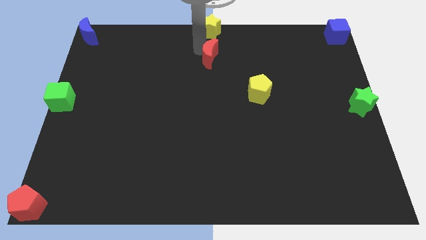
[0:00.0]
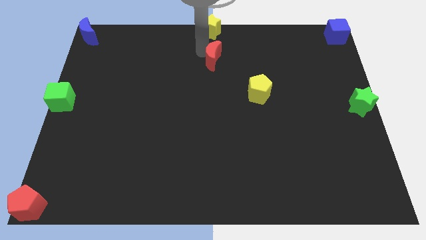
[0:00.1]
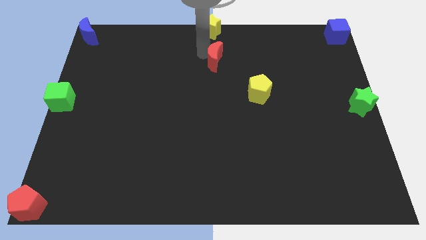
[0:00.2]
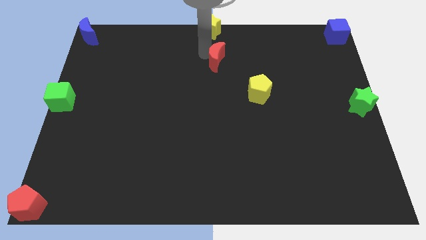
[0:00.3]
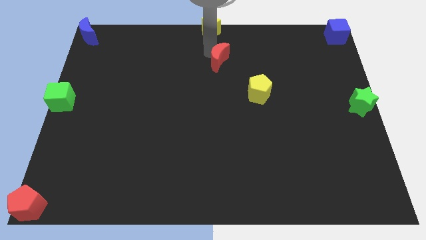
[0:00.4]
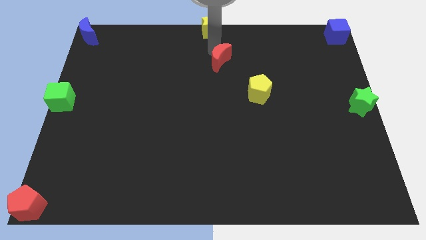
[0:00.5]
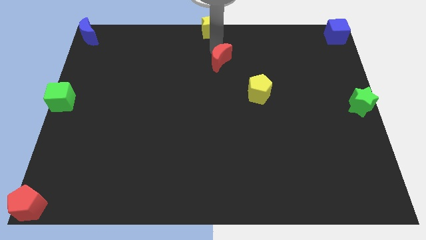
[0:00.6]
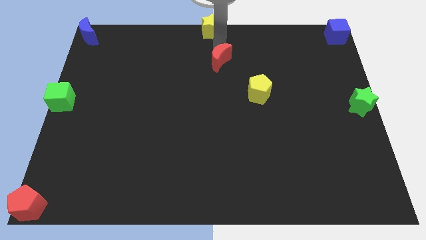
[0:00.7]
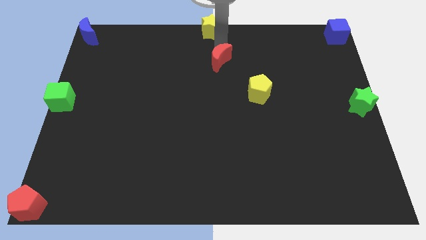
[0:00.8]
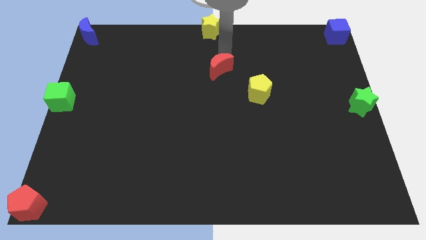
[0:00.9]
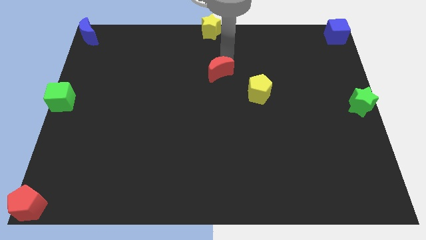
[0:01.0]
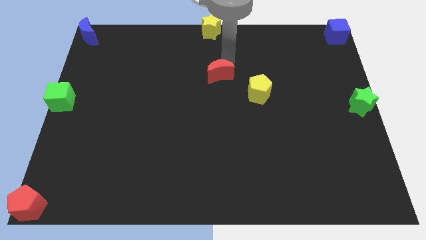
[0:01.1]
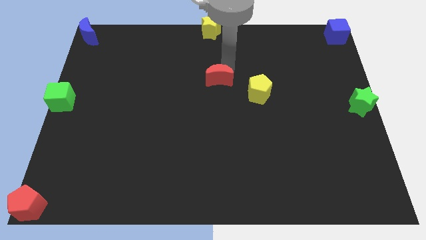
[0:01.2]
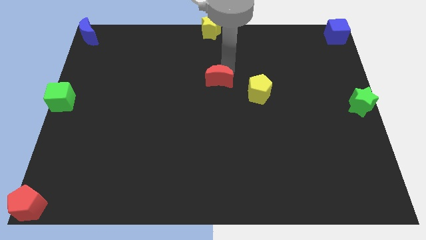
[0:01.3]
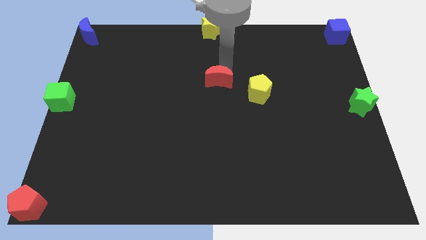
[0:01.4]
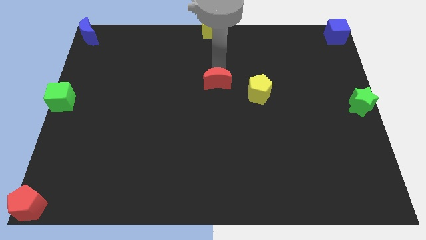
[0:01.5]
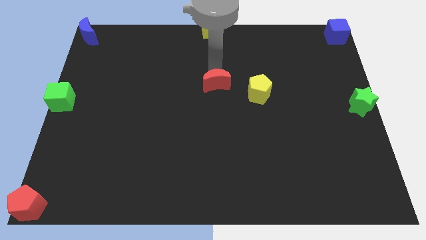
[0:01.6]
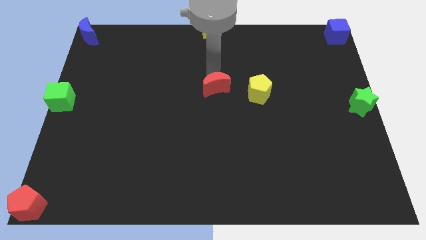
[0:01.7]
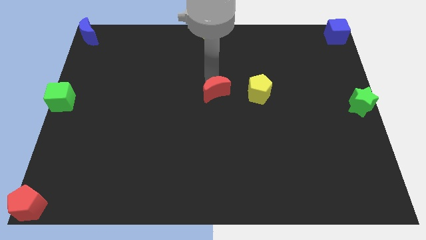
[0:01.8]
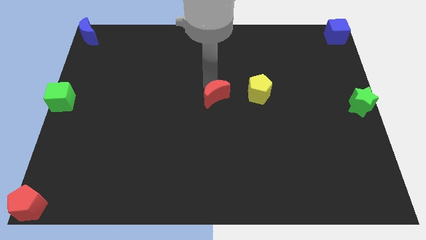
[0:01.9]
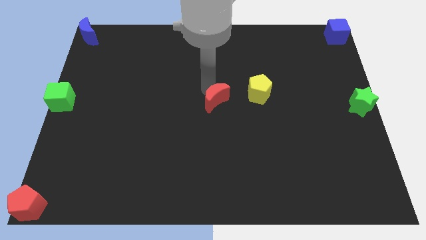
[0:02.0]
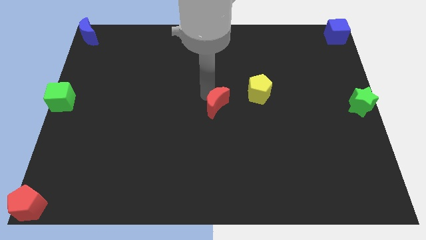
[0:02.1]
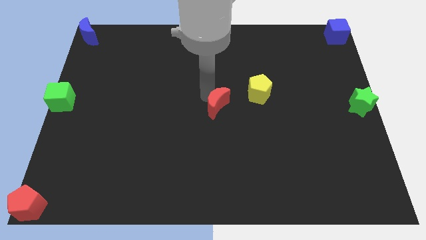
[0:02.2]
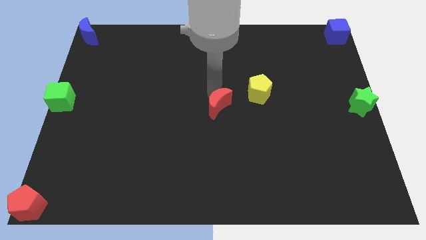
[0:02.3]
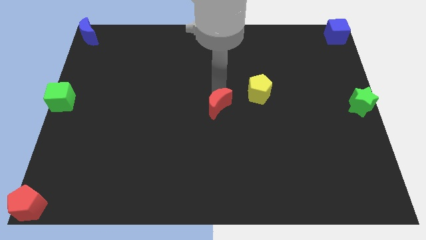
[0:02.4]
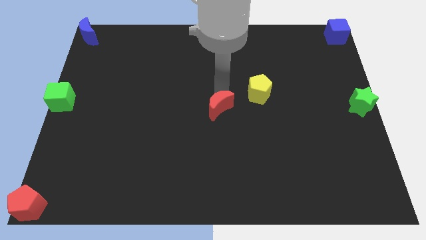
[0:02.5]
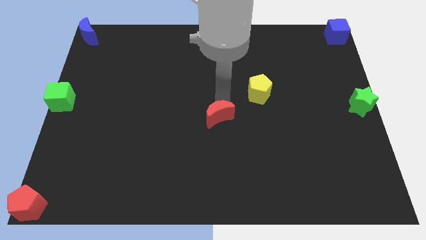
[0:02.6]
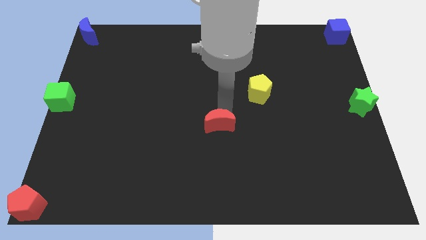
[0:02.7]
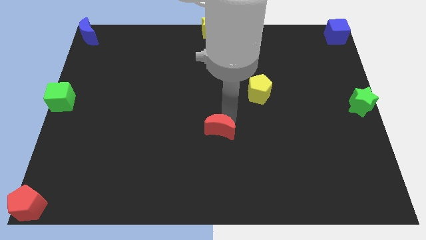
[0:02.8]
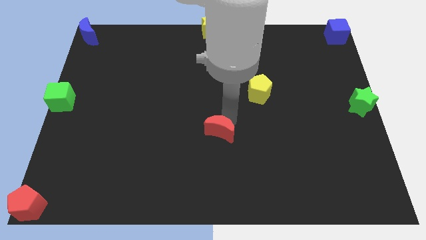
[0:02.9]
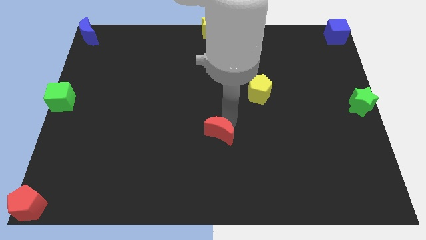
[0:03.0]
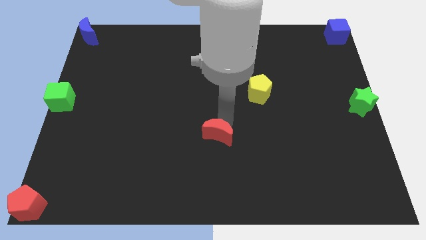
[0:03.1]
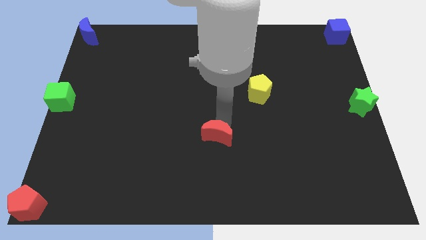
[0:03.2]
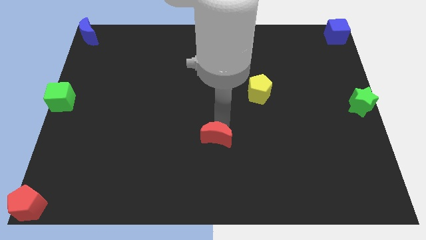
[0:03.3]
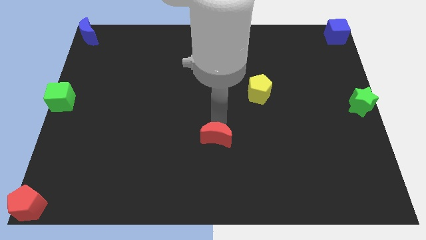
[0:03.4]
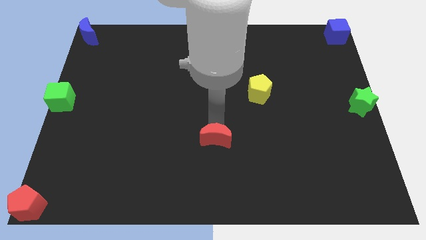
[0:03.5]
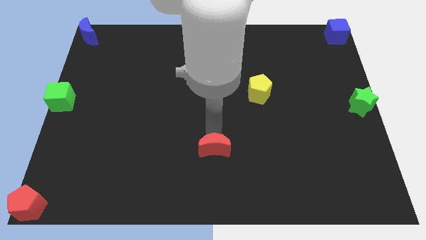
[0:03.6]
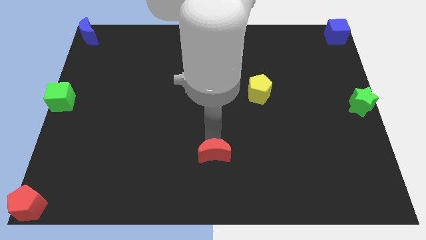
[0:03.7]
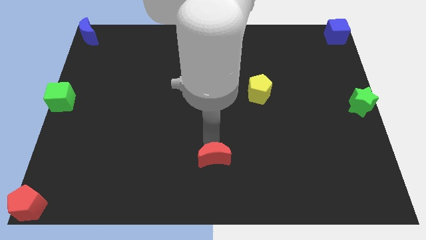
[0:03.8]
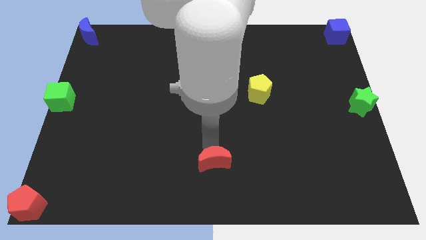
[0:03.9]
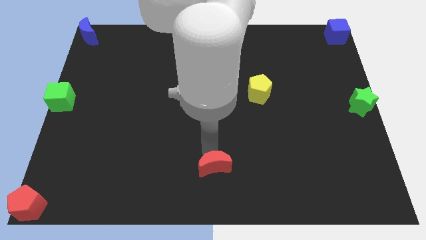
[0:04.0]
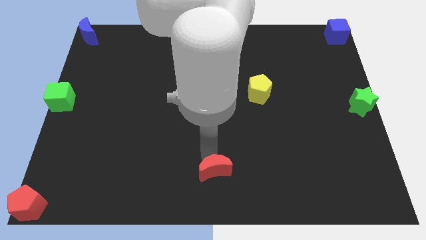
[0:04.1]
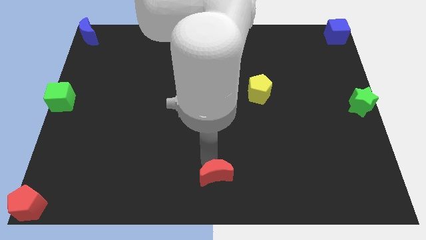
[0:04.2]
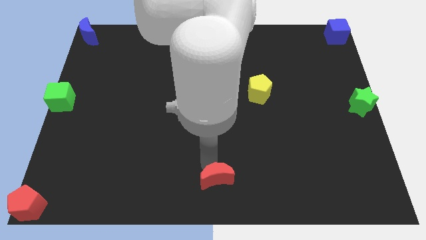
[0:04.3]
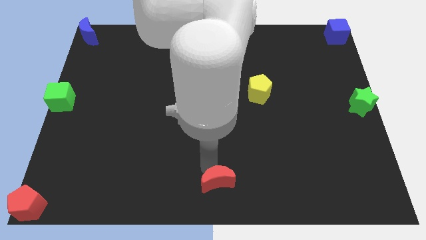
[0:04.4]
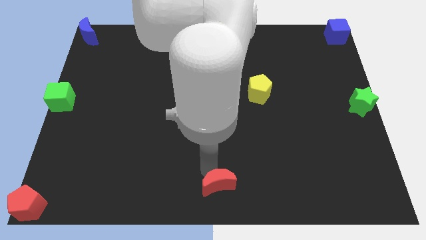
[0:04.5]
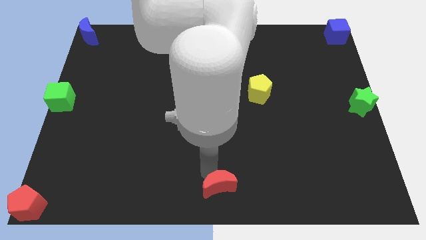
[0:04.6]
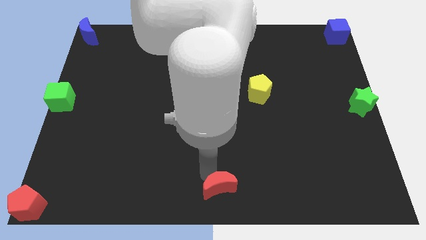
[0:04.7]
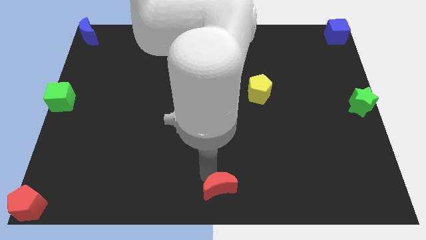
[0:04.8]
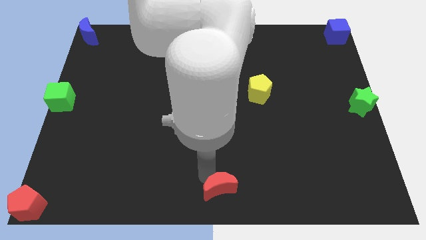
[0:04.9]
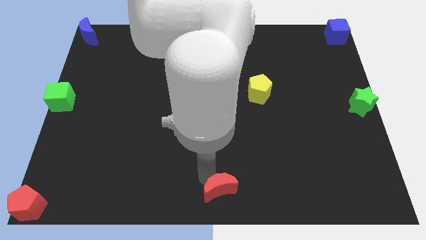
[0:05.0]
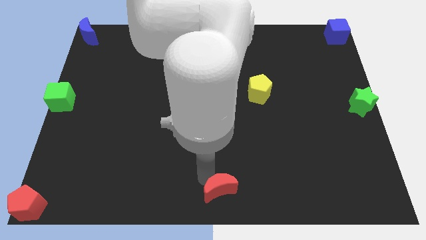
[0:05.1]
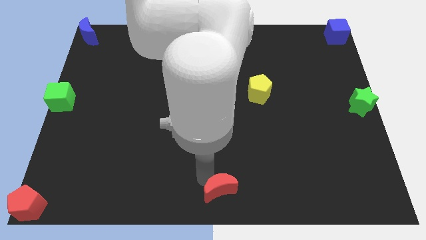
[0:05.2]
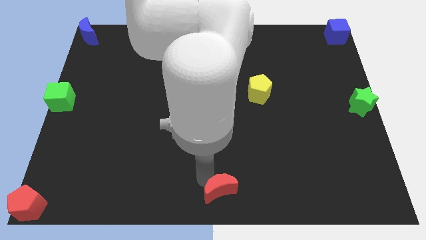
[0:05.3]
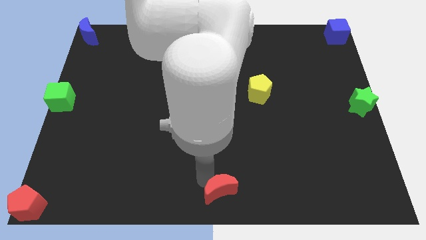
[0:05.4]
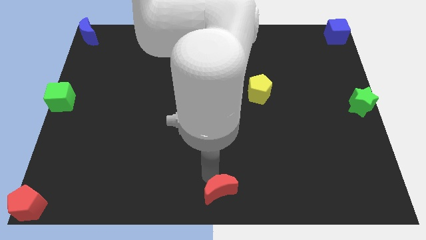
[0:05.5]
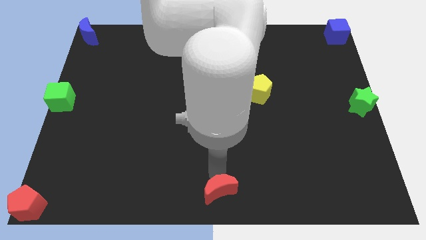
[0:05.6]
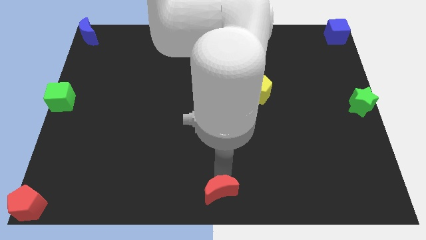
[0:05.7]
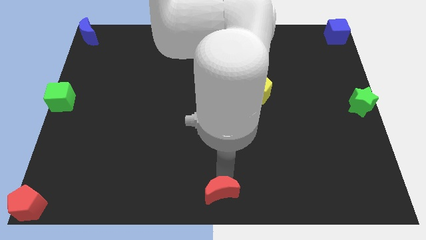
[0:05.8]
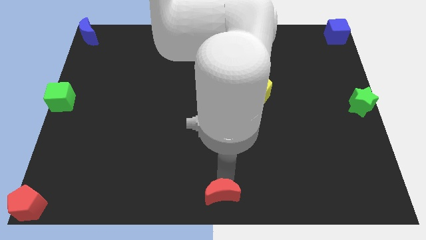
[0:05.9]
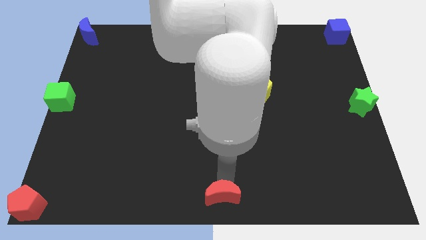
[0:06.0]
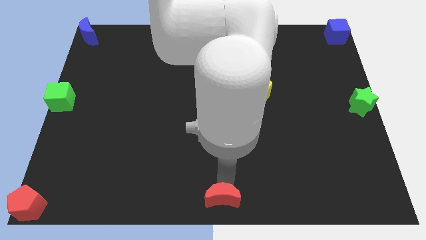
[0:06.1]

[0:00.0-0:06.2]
move the red moon to the bottom center of the board

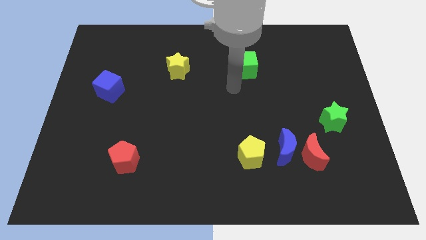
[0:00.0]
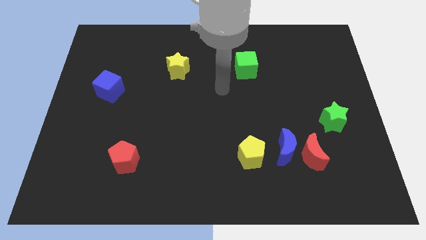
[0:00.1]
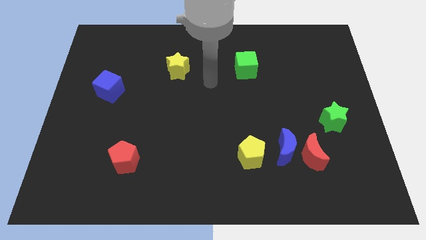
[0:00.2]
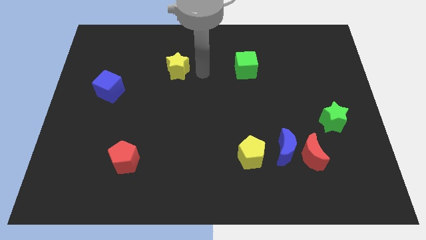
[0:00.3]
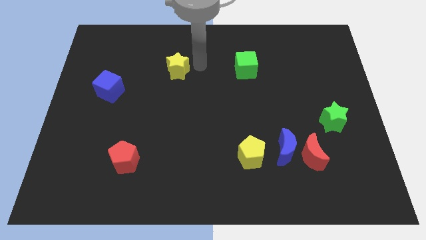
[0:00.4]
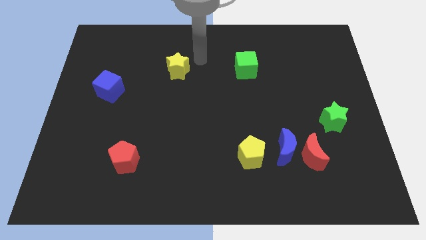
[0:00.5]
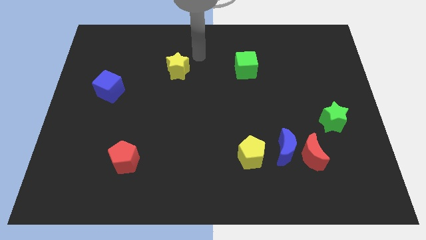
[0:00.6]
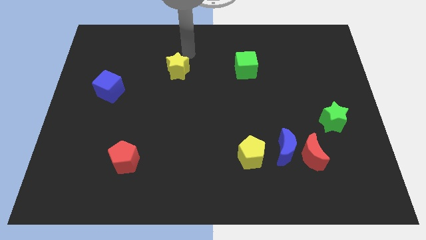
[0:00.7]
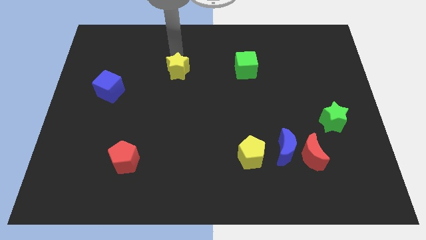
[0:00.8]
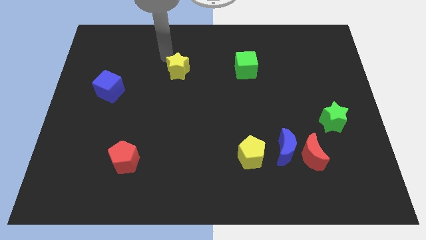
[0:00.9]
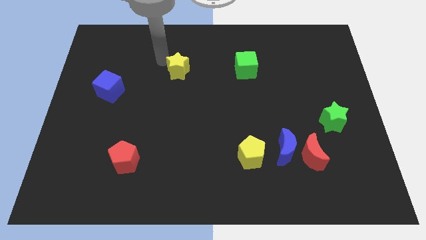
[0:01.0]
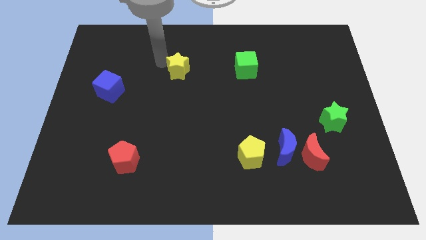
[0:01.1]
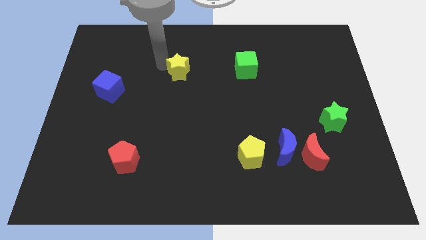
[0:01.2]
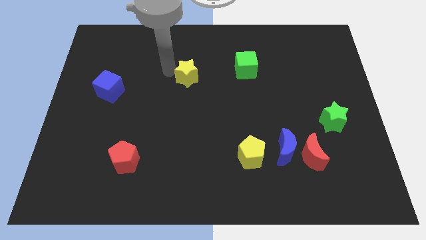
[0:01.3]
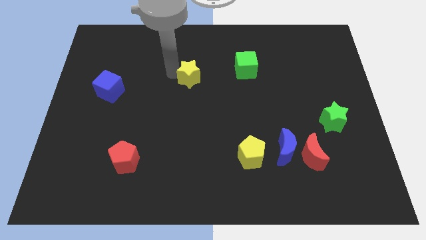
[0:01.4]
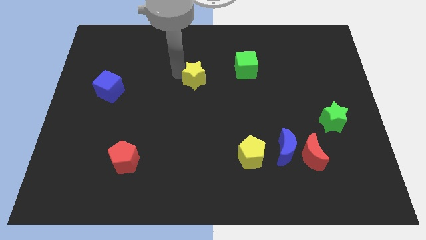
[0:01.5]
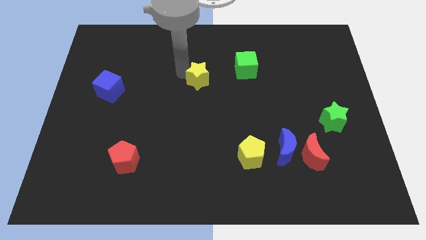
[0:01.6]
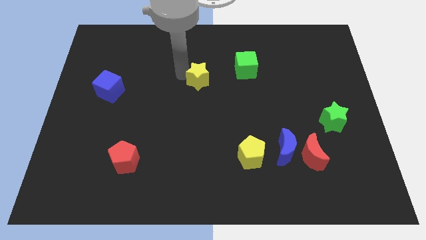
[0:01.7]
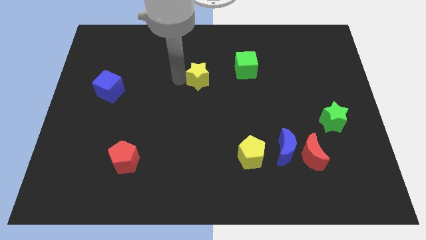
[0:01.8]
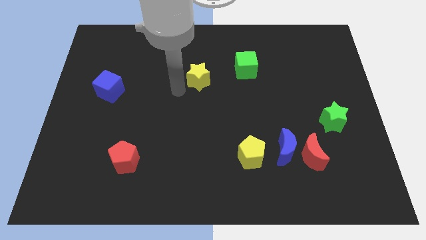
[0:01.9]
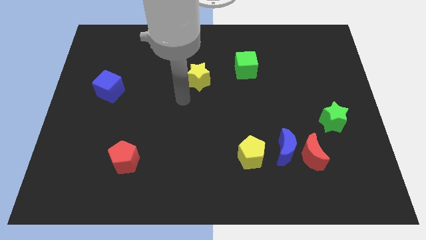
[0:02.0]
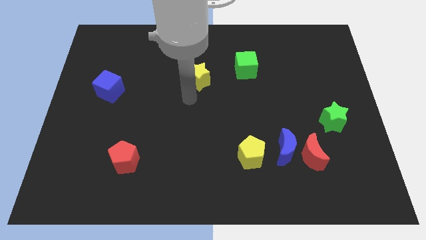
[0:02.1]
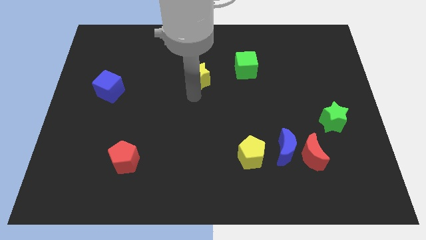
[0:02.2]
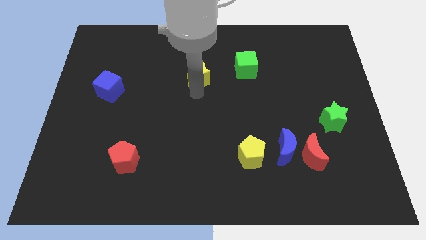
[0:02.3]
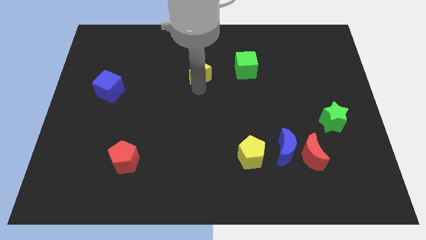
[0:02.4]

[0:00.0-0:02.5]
move the yellow star to the right side

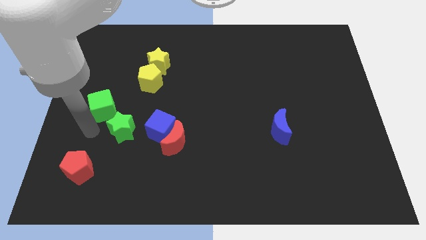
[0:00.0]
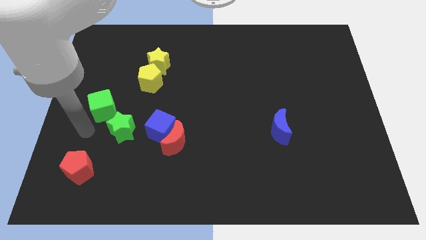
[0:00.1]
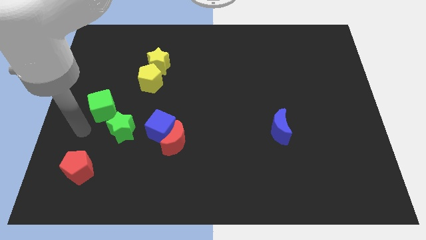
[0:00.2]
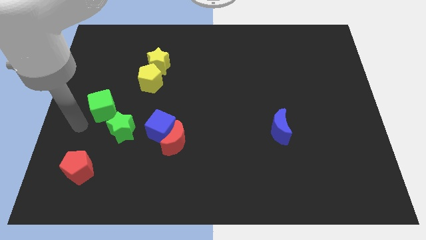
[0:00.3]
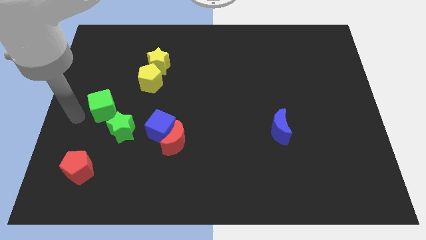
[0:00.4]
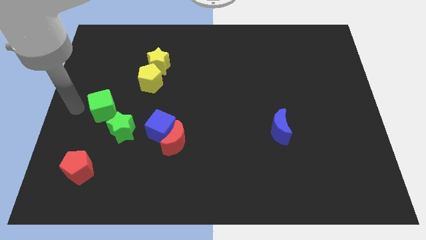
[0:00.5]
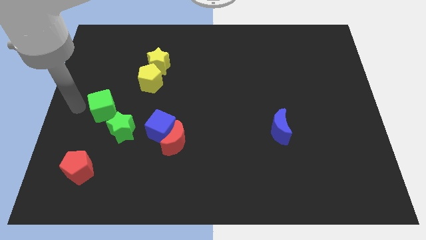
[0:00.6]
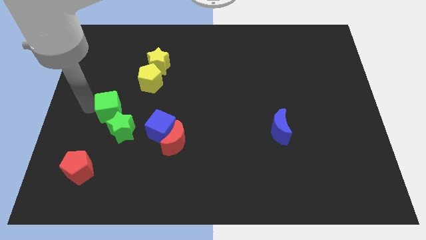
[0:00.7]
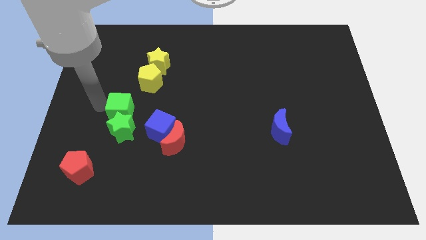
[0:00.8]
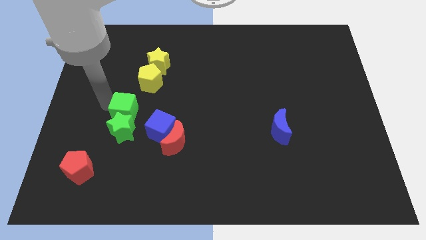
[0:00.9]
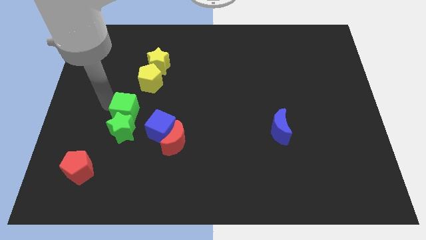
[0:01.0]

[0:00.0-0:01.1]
drag the green cube above the green star
